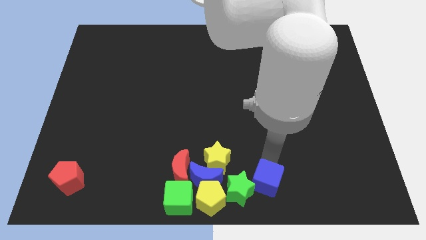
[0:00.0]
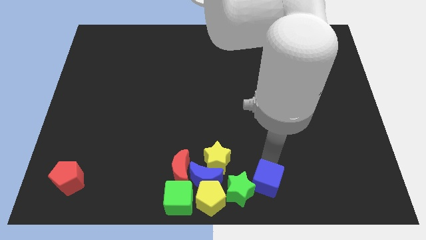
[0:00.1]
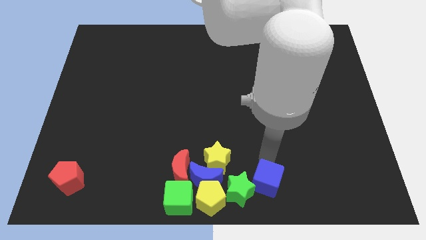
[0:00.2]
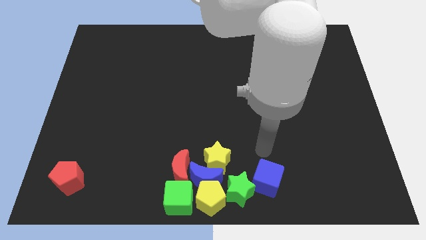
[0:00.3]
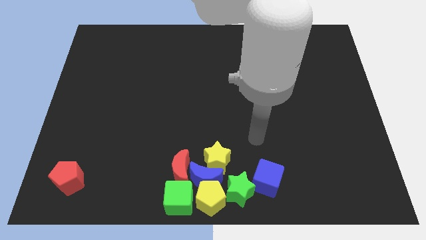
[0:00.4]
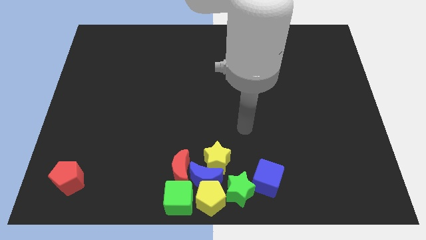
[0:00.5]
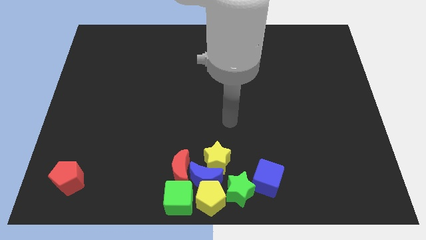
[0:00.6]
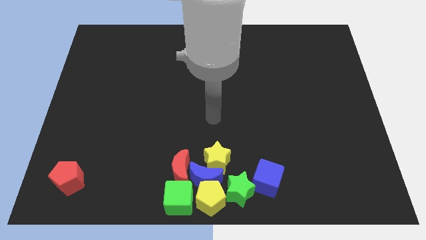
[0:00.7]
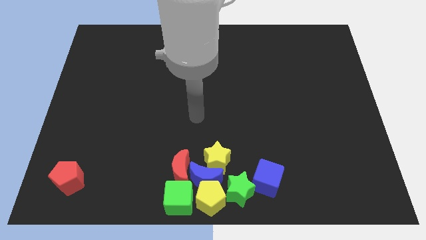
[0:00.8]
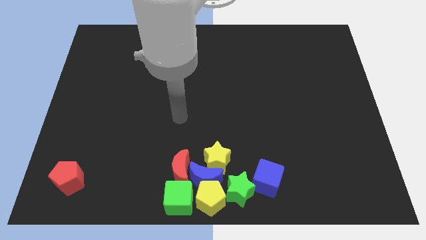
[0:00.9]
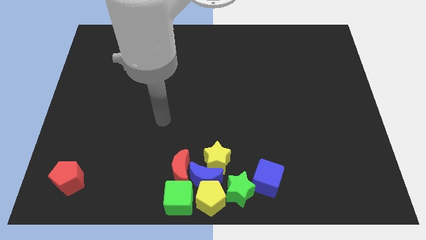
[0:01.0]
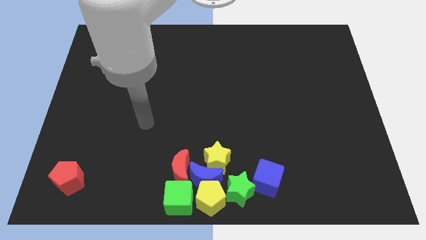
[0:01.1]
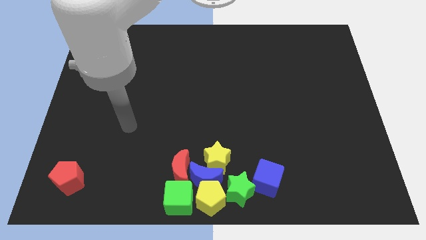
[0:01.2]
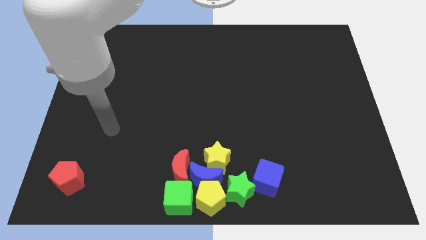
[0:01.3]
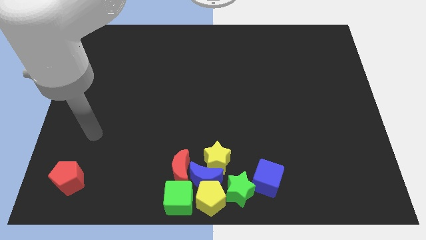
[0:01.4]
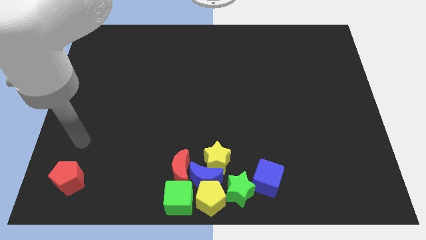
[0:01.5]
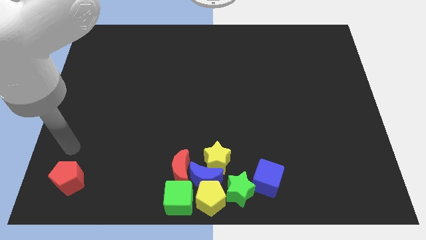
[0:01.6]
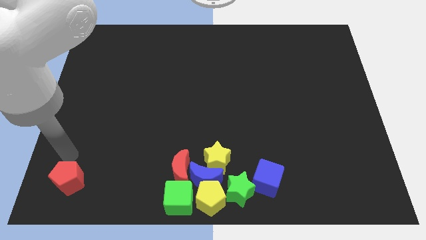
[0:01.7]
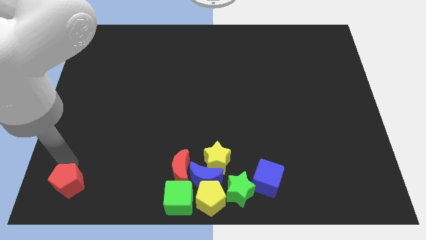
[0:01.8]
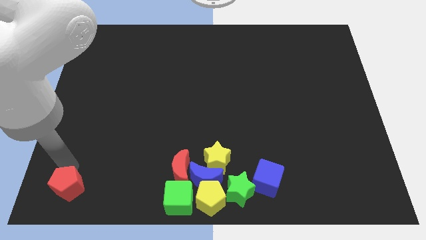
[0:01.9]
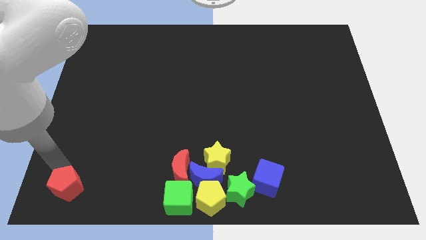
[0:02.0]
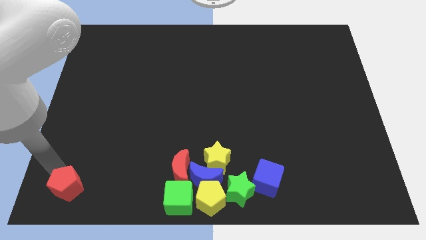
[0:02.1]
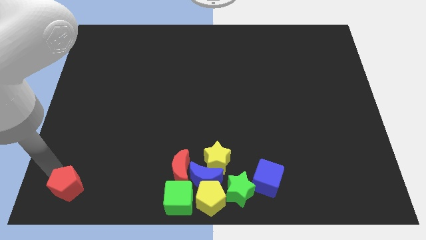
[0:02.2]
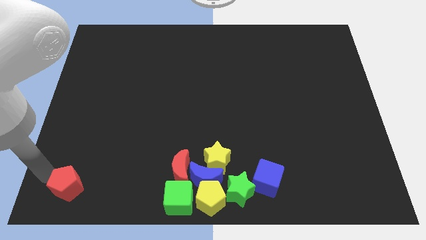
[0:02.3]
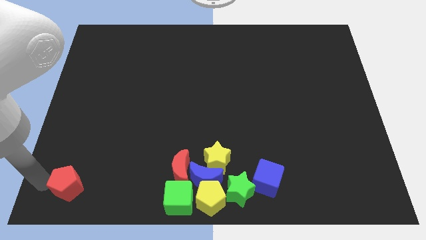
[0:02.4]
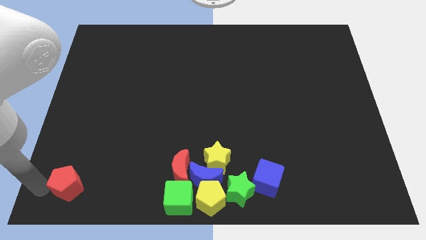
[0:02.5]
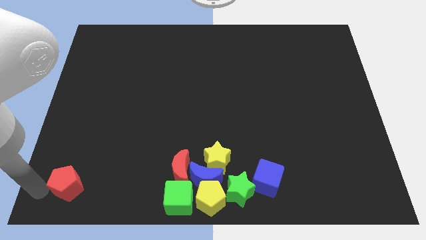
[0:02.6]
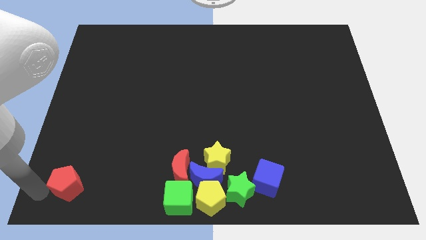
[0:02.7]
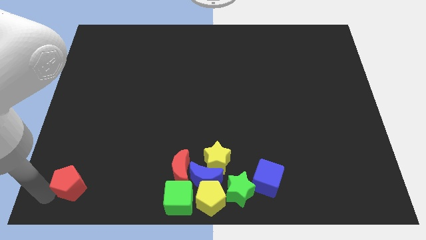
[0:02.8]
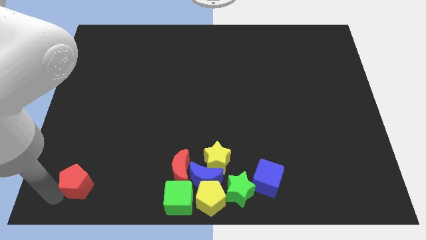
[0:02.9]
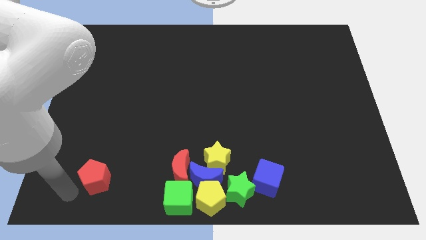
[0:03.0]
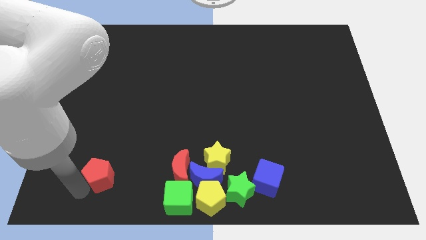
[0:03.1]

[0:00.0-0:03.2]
move the arm away from the blue cube

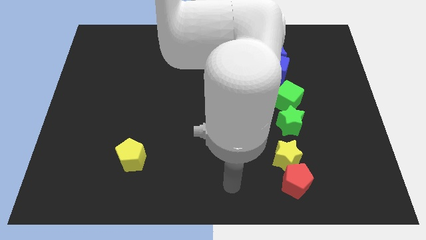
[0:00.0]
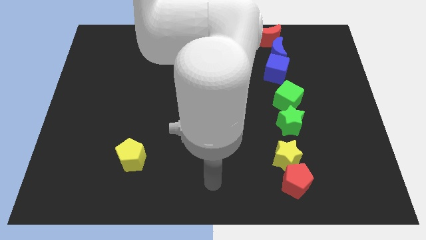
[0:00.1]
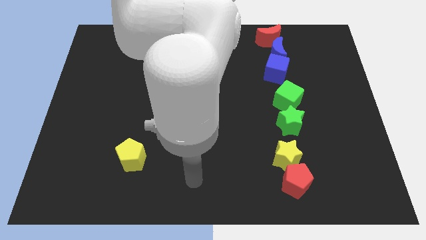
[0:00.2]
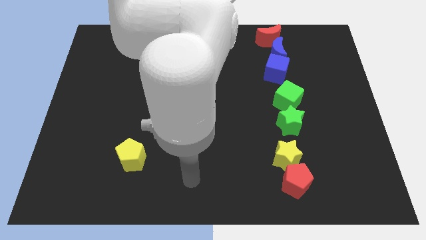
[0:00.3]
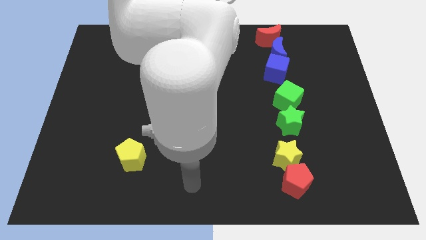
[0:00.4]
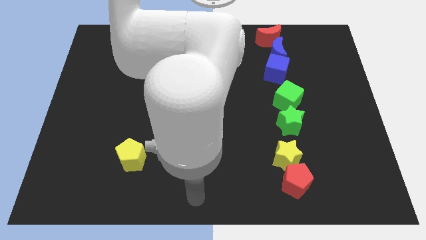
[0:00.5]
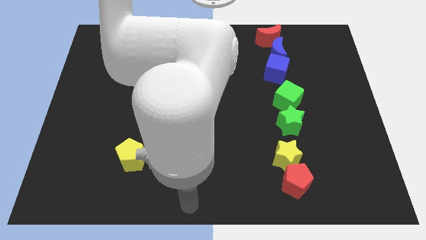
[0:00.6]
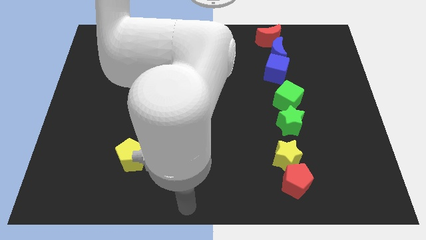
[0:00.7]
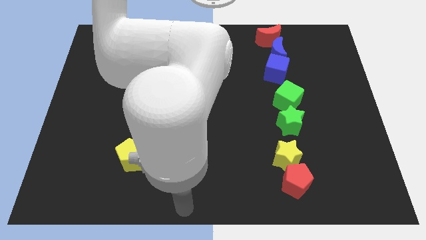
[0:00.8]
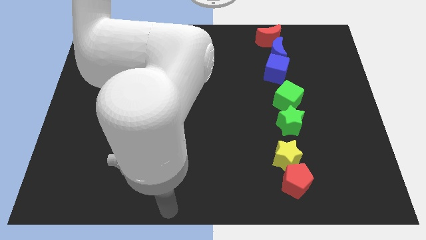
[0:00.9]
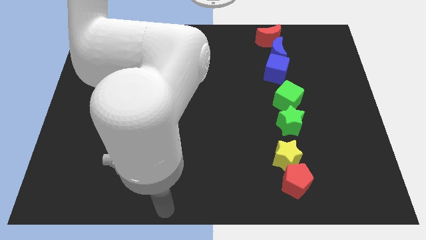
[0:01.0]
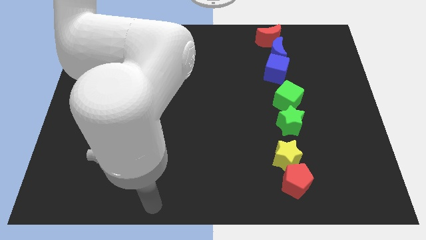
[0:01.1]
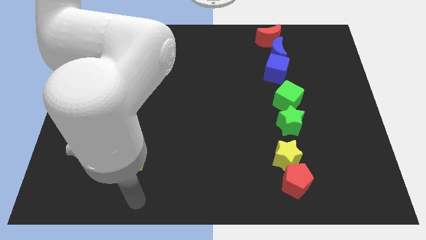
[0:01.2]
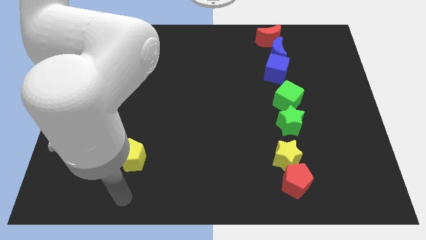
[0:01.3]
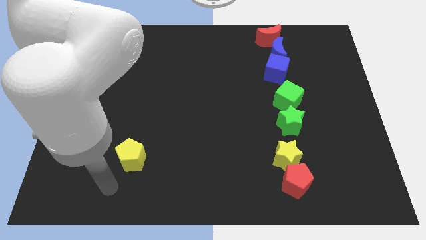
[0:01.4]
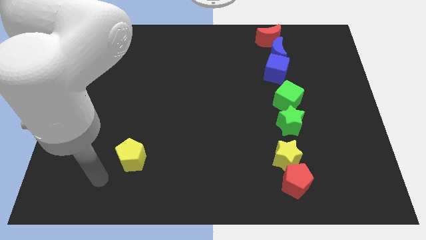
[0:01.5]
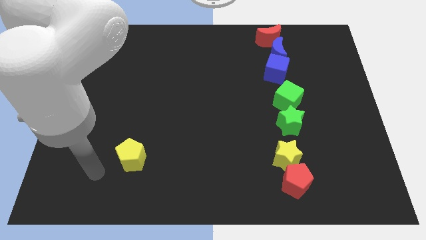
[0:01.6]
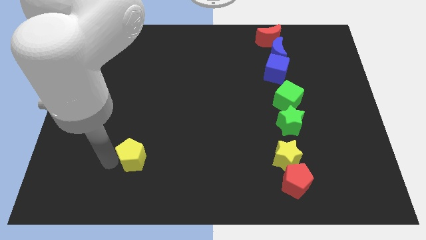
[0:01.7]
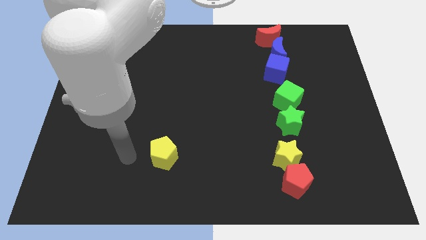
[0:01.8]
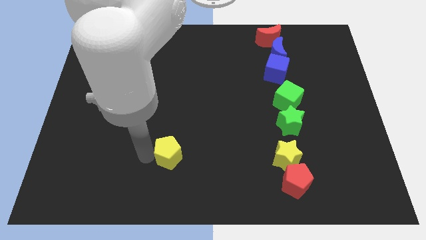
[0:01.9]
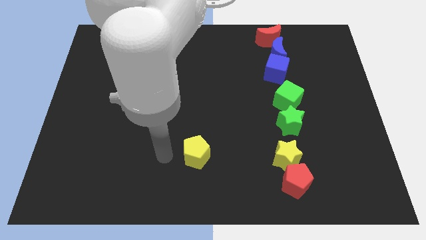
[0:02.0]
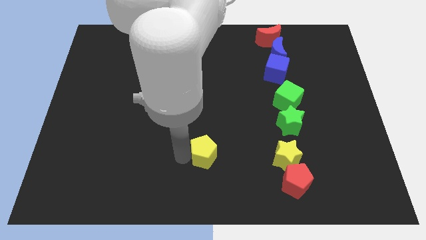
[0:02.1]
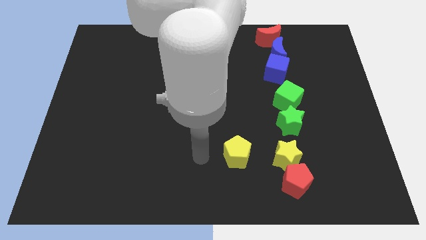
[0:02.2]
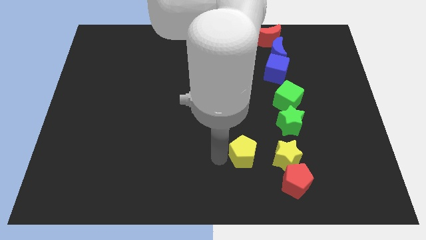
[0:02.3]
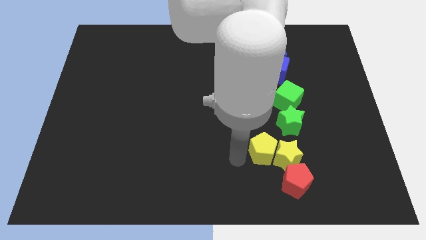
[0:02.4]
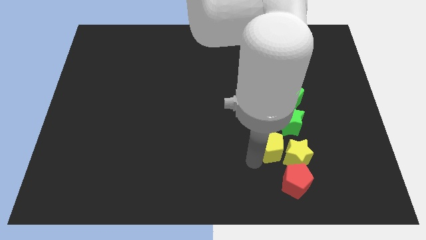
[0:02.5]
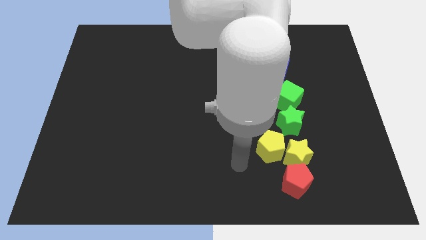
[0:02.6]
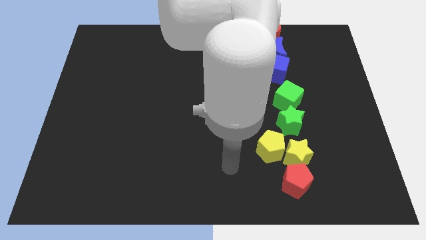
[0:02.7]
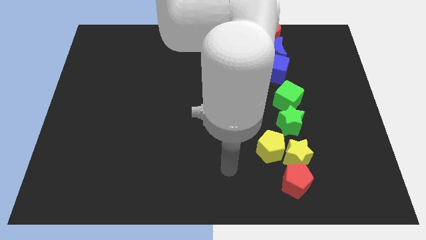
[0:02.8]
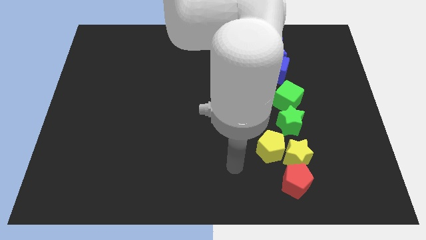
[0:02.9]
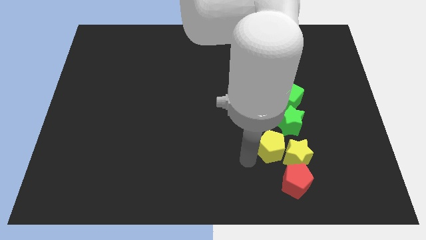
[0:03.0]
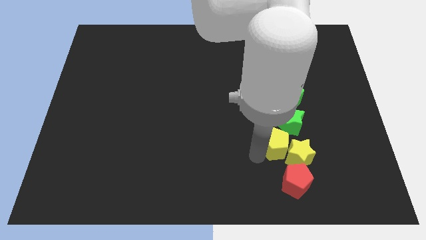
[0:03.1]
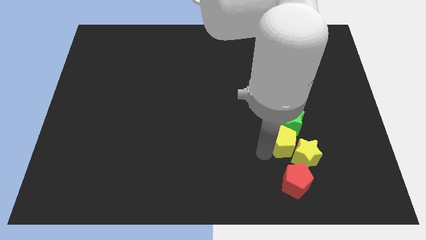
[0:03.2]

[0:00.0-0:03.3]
push the yellow pentagon into yellow star

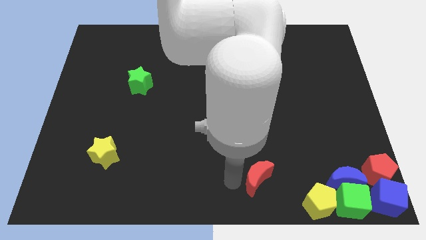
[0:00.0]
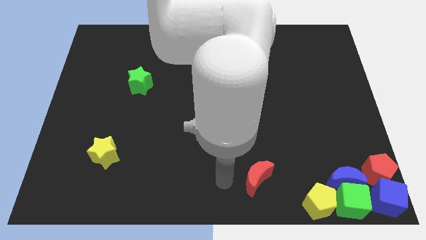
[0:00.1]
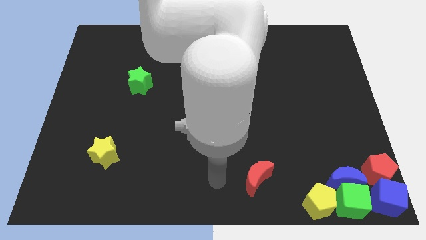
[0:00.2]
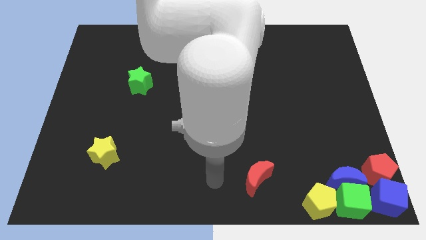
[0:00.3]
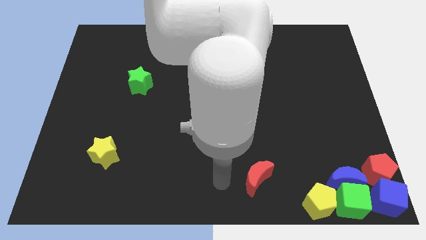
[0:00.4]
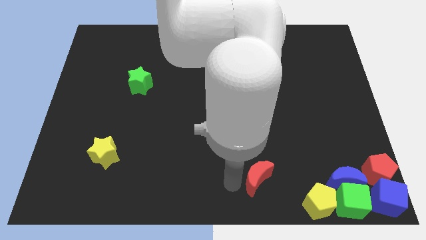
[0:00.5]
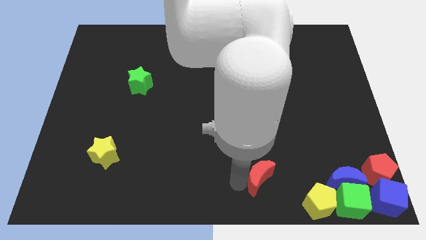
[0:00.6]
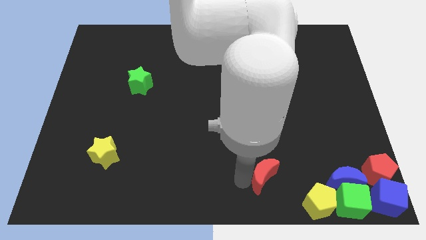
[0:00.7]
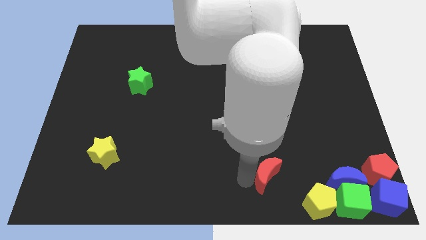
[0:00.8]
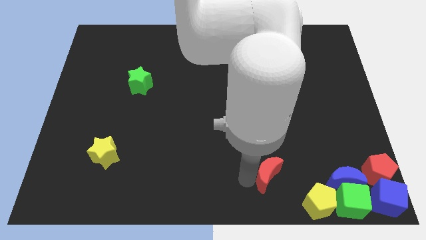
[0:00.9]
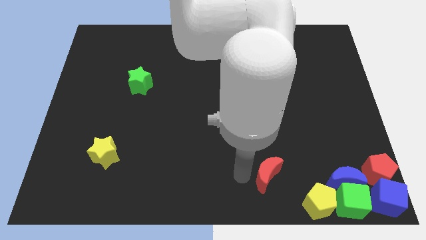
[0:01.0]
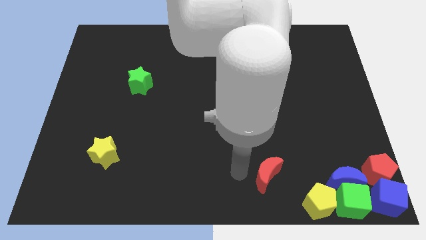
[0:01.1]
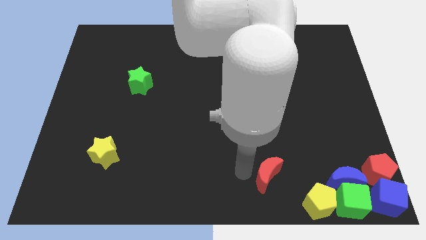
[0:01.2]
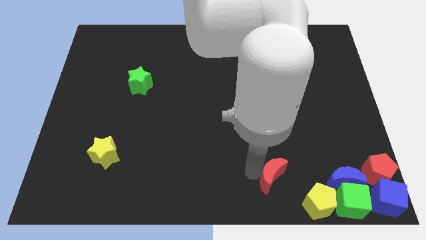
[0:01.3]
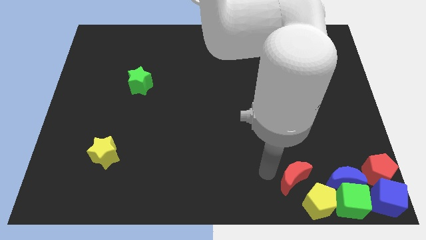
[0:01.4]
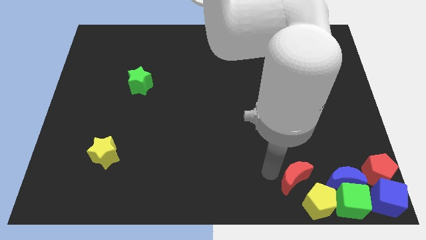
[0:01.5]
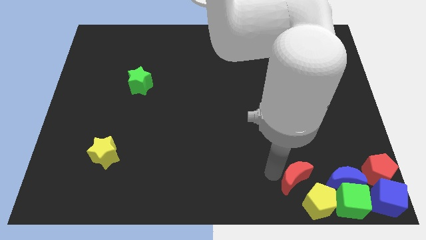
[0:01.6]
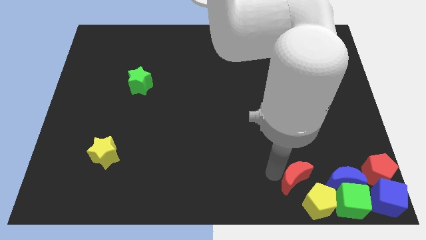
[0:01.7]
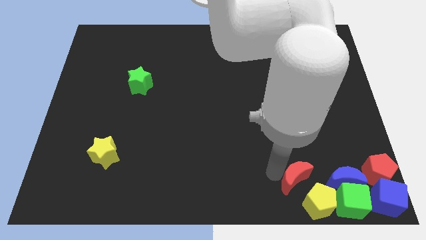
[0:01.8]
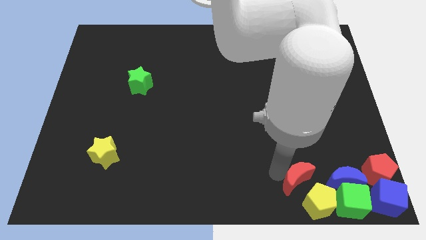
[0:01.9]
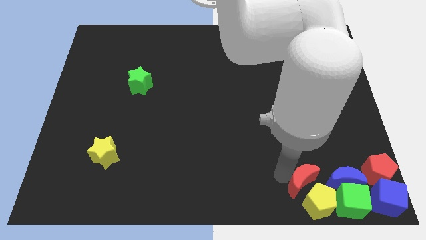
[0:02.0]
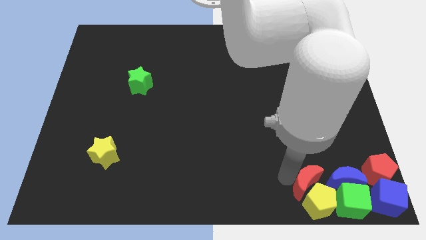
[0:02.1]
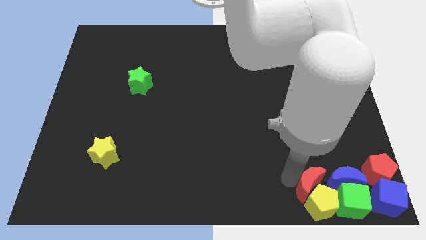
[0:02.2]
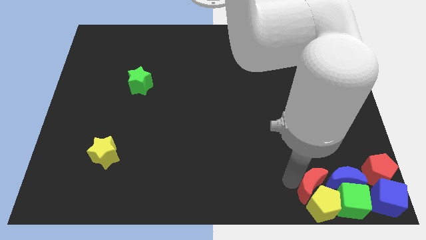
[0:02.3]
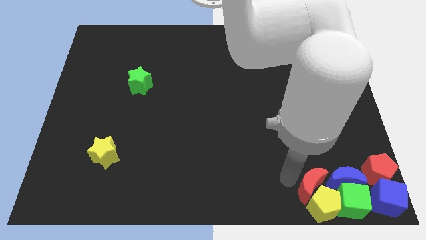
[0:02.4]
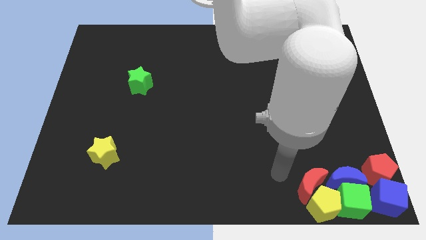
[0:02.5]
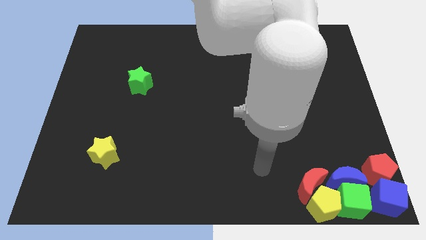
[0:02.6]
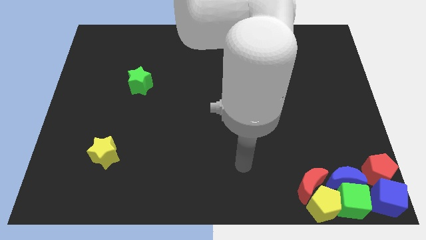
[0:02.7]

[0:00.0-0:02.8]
push the red moon towards the group of blocks
